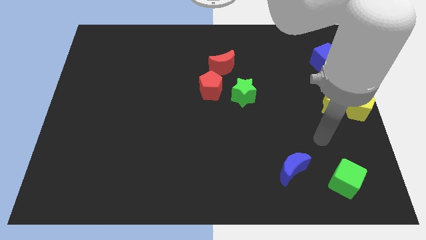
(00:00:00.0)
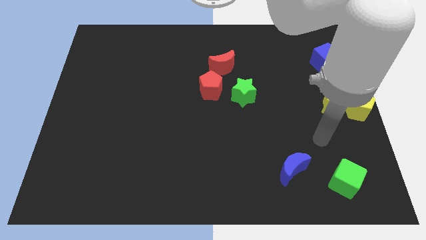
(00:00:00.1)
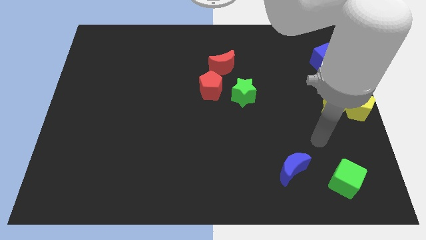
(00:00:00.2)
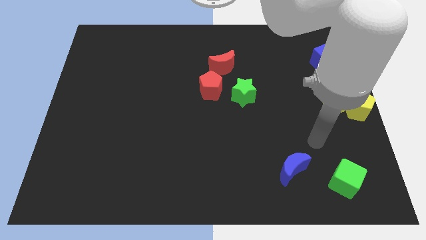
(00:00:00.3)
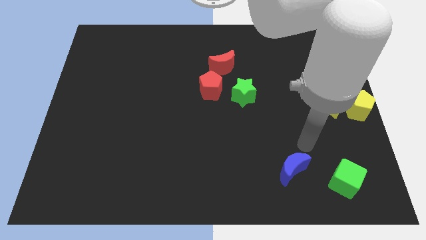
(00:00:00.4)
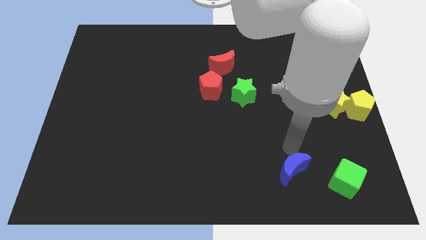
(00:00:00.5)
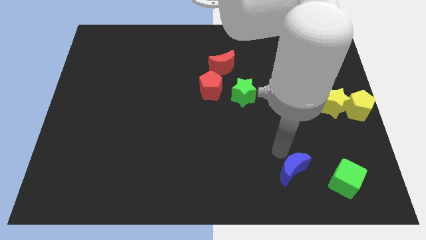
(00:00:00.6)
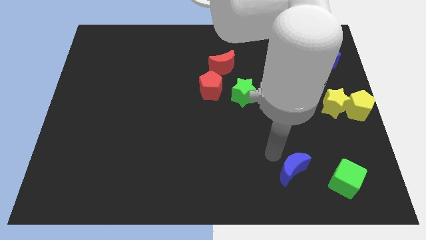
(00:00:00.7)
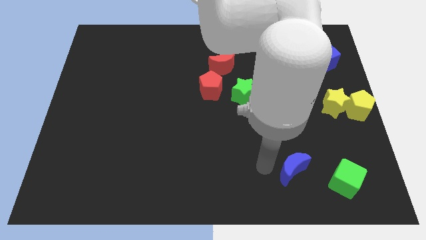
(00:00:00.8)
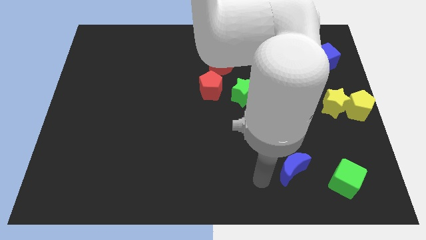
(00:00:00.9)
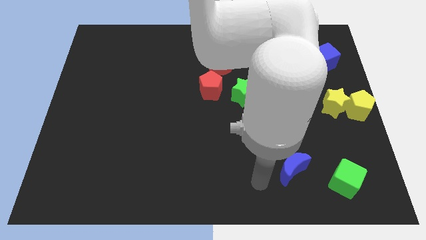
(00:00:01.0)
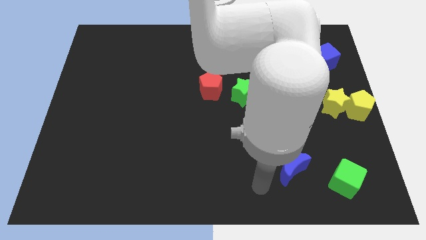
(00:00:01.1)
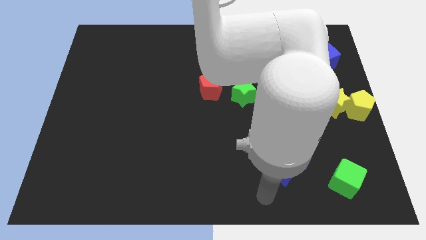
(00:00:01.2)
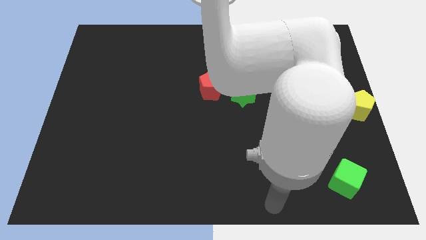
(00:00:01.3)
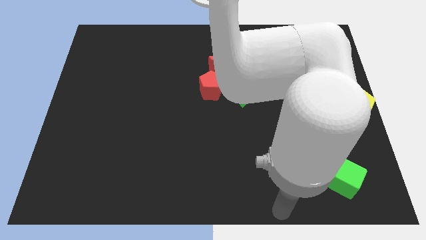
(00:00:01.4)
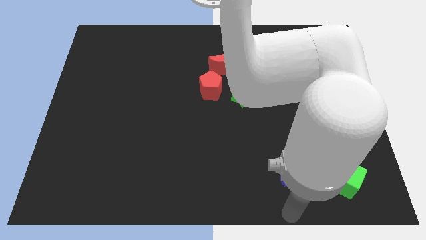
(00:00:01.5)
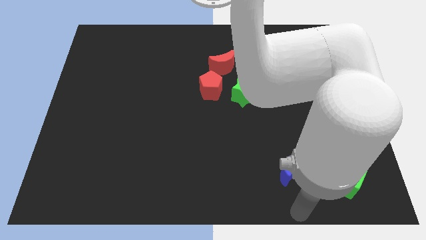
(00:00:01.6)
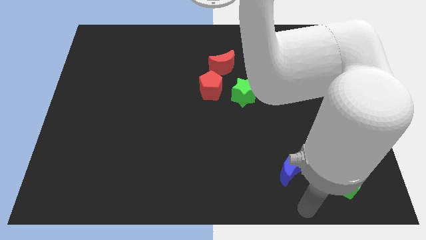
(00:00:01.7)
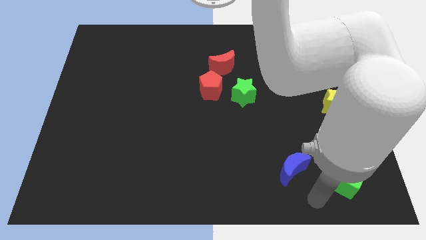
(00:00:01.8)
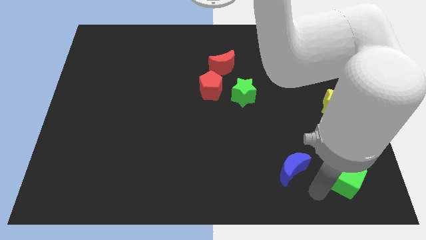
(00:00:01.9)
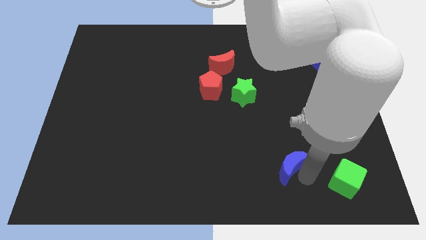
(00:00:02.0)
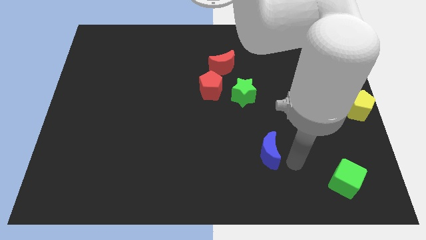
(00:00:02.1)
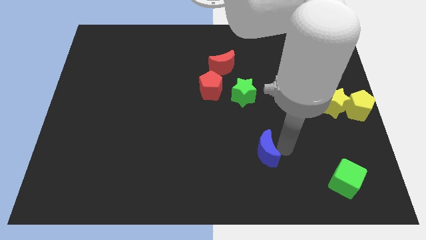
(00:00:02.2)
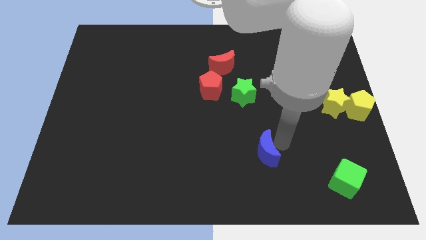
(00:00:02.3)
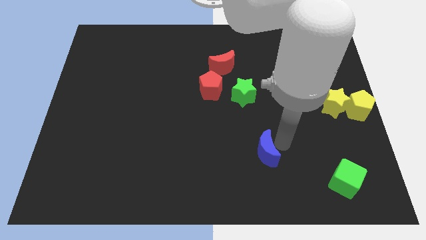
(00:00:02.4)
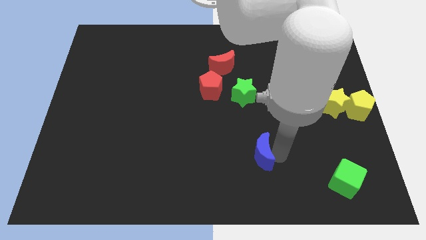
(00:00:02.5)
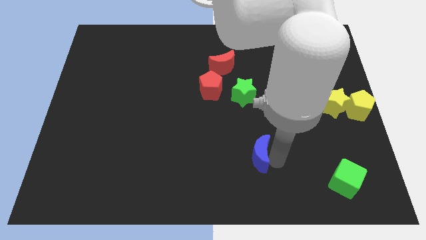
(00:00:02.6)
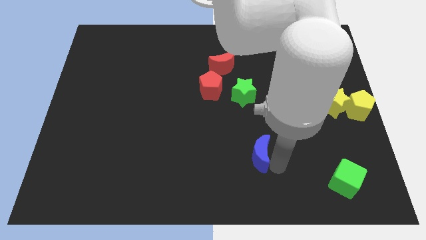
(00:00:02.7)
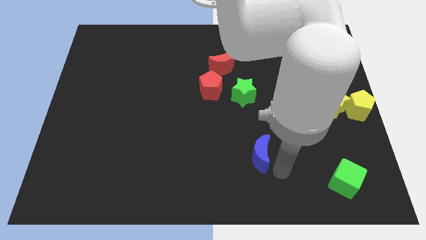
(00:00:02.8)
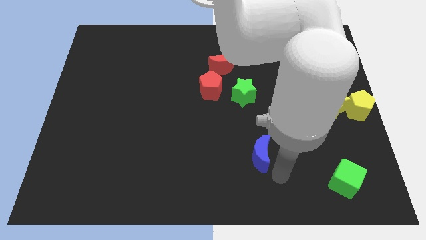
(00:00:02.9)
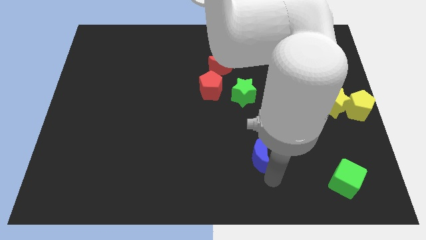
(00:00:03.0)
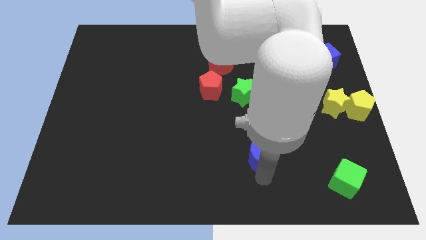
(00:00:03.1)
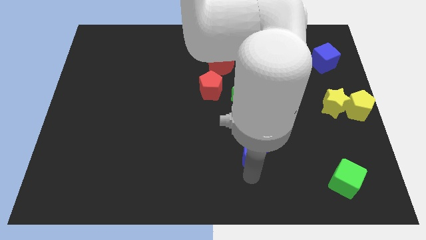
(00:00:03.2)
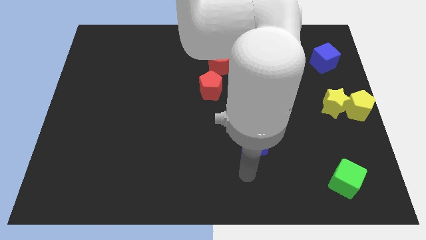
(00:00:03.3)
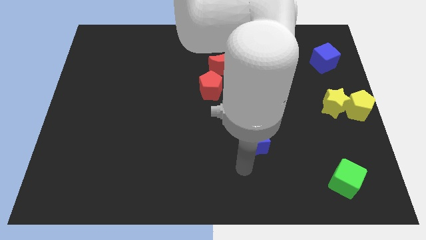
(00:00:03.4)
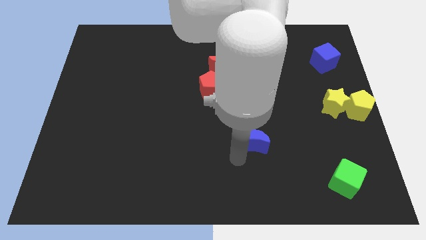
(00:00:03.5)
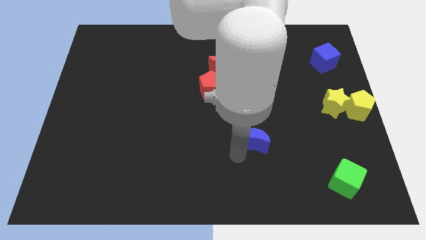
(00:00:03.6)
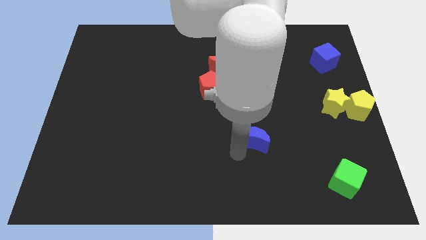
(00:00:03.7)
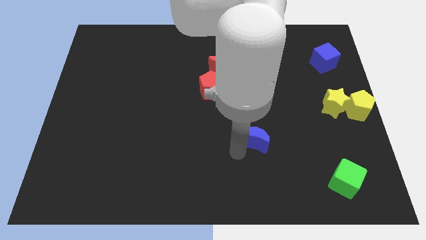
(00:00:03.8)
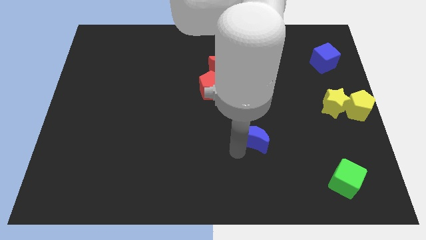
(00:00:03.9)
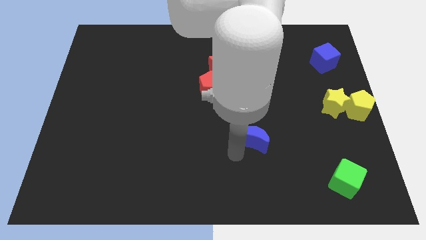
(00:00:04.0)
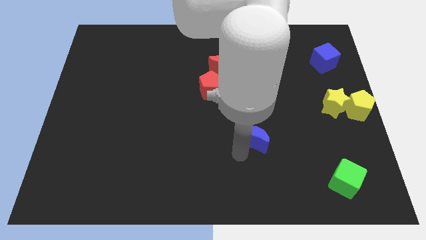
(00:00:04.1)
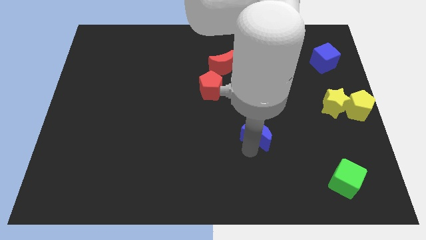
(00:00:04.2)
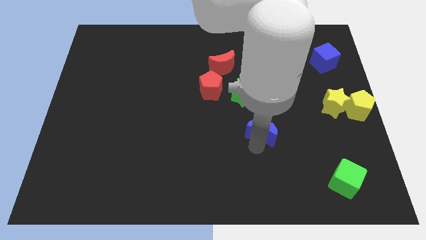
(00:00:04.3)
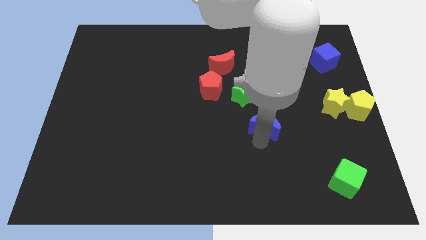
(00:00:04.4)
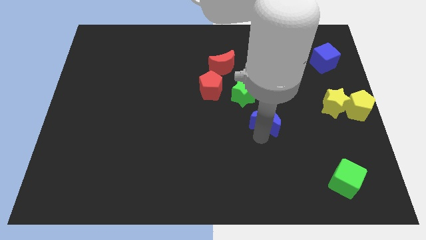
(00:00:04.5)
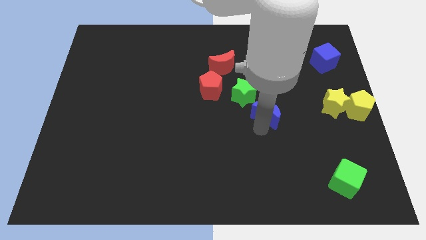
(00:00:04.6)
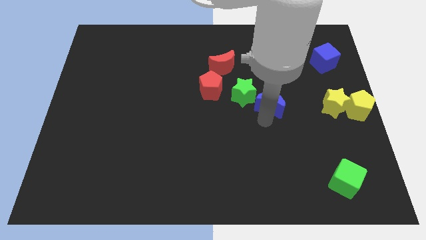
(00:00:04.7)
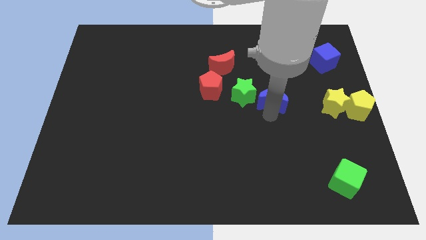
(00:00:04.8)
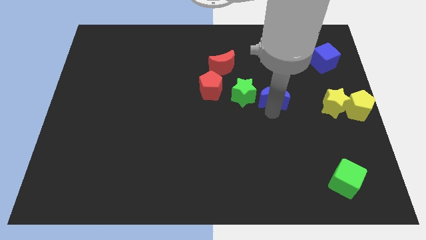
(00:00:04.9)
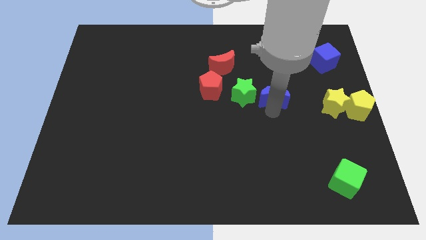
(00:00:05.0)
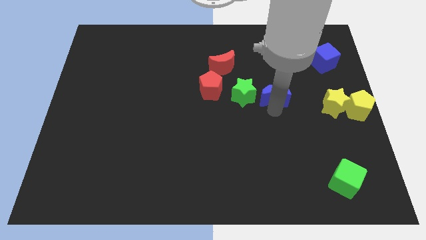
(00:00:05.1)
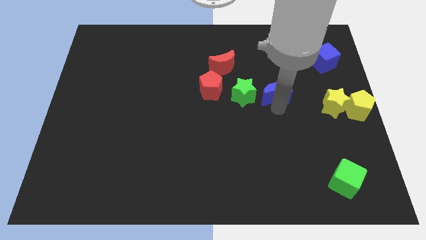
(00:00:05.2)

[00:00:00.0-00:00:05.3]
move the blue crescent to the right of the green star

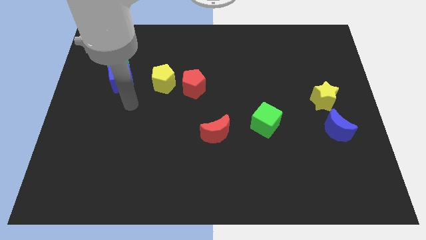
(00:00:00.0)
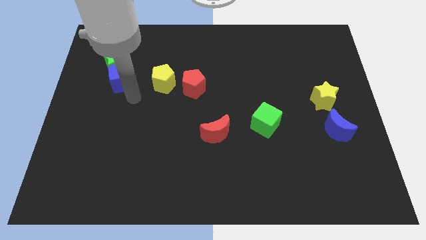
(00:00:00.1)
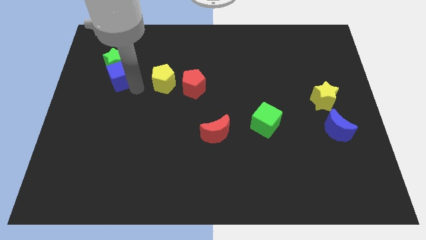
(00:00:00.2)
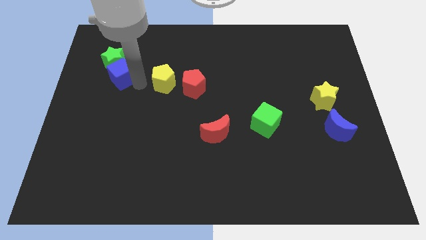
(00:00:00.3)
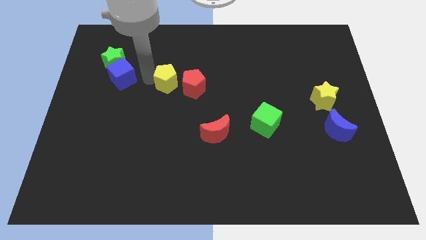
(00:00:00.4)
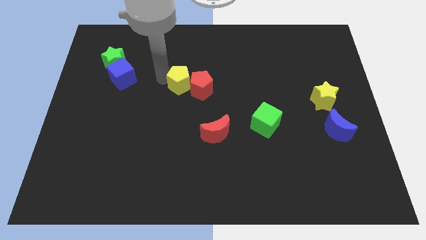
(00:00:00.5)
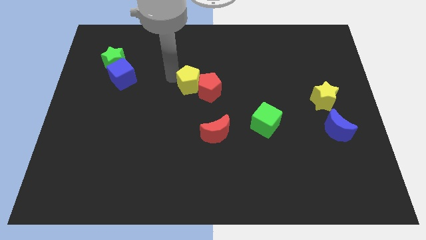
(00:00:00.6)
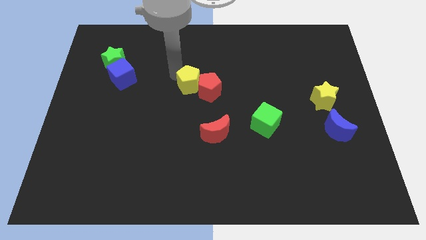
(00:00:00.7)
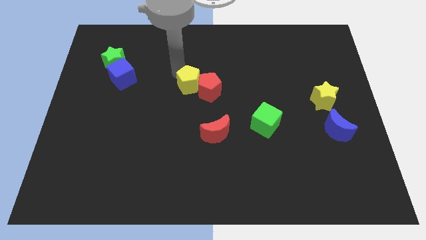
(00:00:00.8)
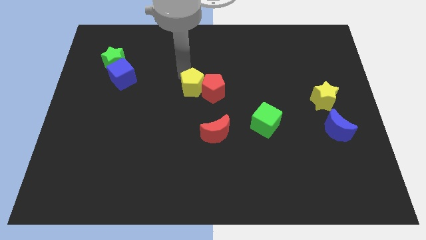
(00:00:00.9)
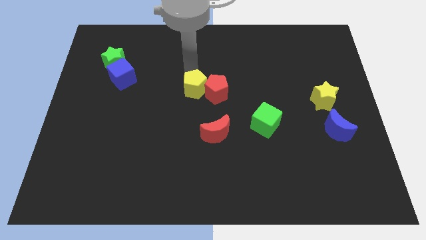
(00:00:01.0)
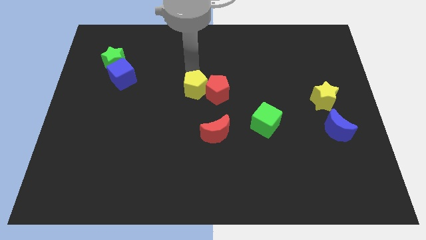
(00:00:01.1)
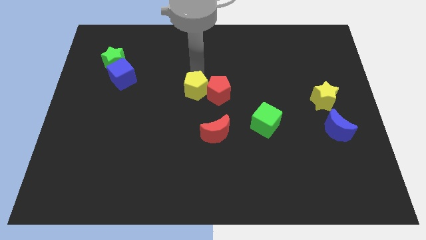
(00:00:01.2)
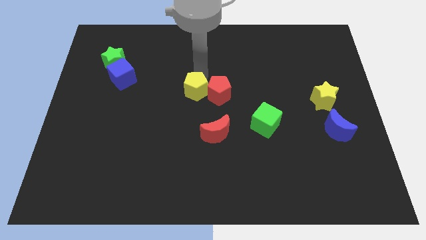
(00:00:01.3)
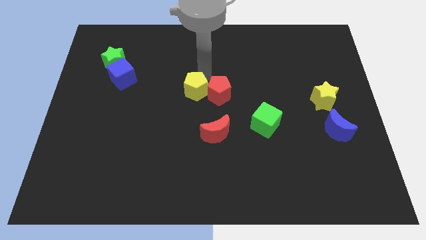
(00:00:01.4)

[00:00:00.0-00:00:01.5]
push the yellow pentagon into the red pentagon towards the center of the board

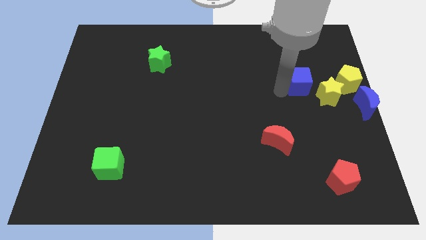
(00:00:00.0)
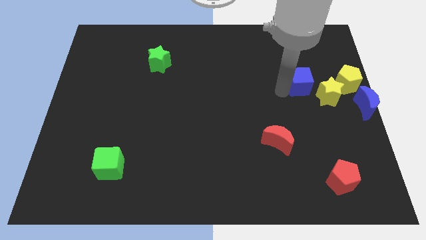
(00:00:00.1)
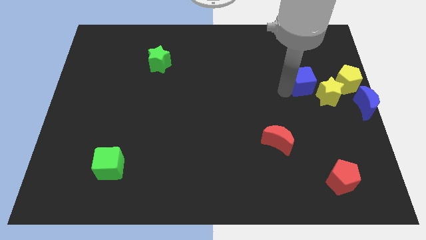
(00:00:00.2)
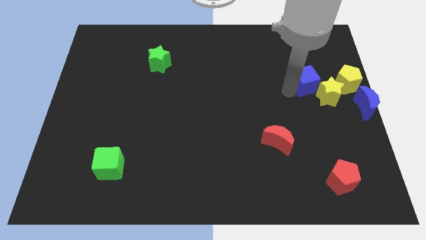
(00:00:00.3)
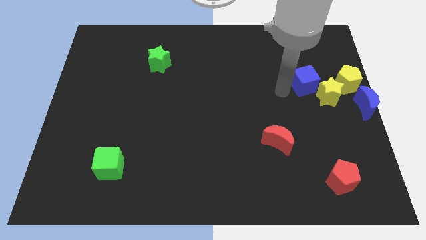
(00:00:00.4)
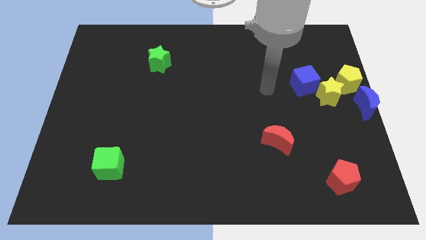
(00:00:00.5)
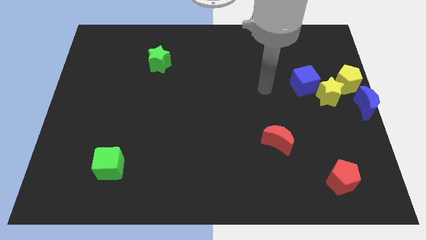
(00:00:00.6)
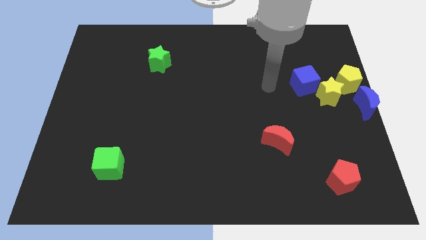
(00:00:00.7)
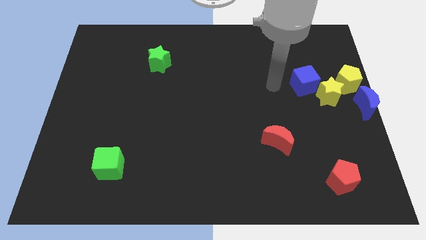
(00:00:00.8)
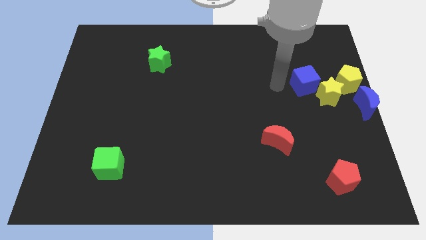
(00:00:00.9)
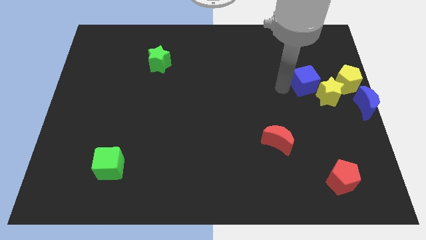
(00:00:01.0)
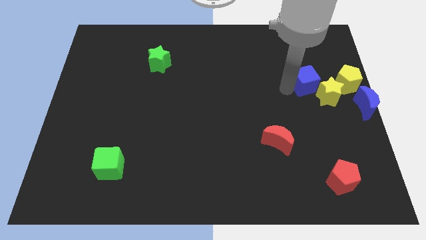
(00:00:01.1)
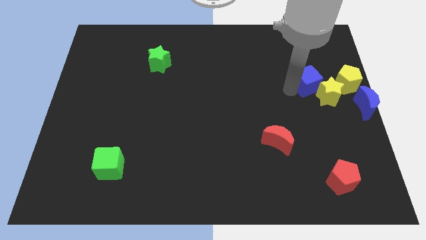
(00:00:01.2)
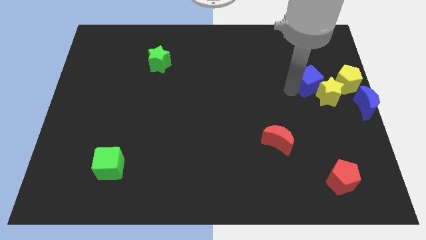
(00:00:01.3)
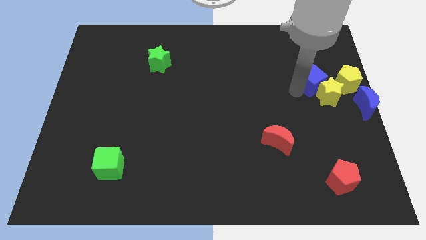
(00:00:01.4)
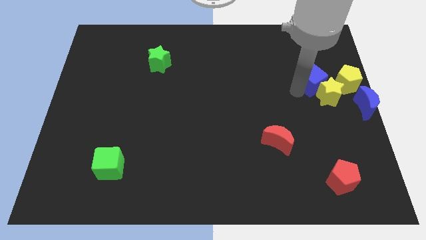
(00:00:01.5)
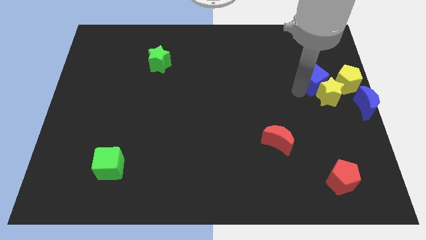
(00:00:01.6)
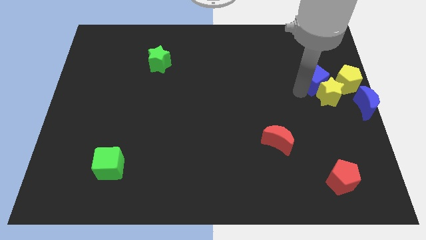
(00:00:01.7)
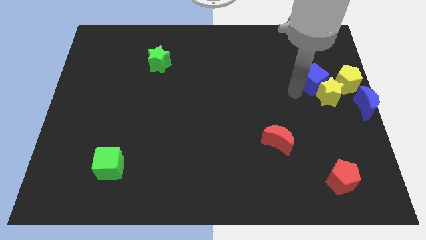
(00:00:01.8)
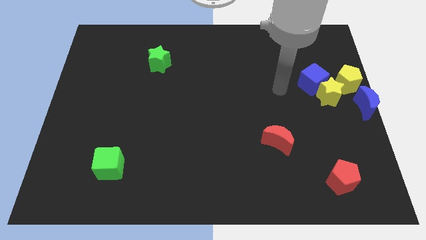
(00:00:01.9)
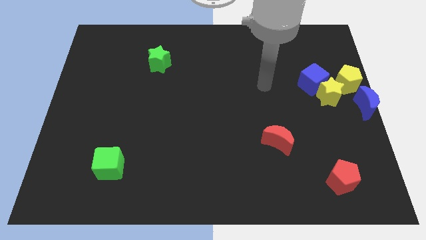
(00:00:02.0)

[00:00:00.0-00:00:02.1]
move the blue cube on the top of the yellow star
